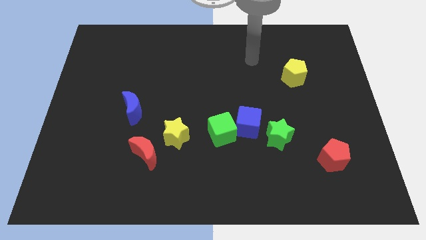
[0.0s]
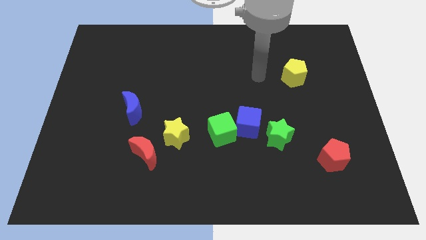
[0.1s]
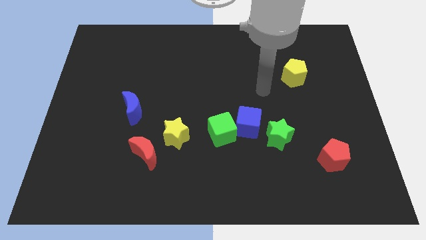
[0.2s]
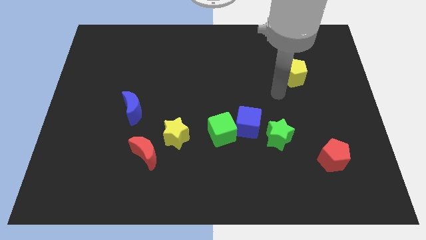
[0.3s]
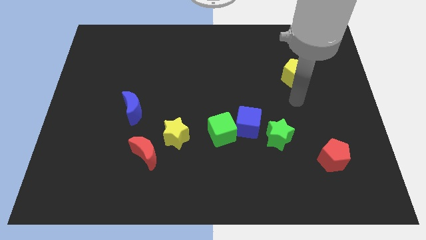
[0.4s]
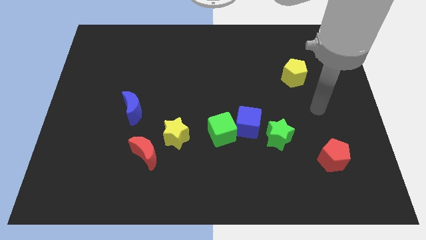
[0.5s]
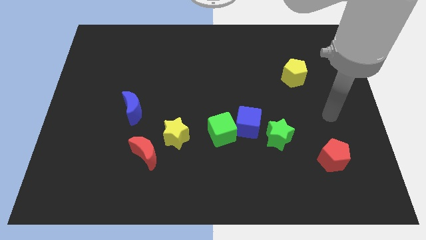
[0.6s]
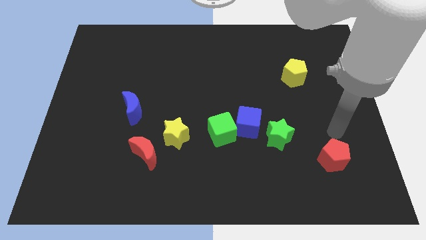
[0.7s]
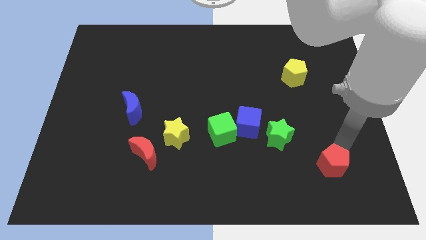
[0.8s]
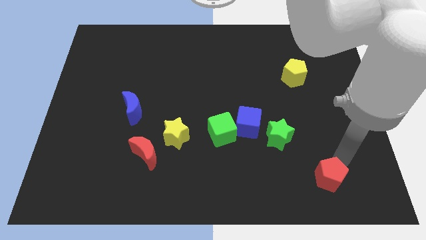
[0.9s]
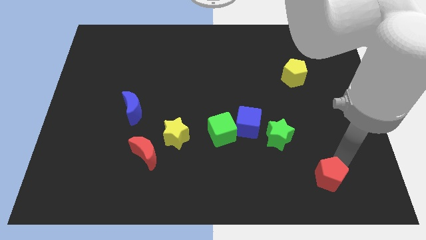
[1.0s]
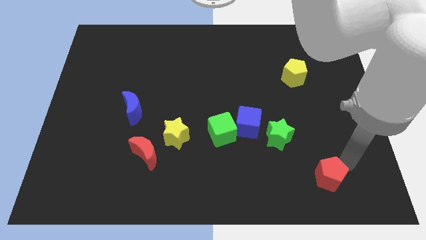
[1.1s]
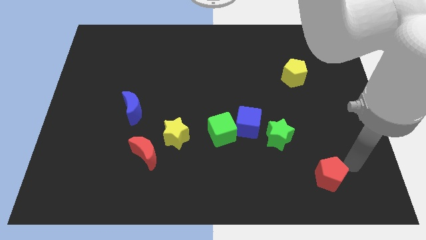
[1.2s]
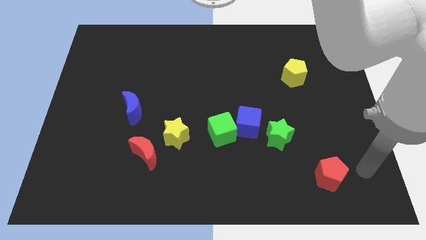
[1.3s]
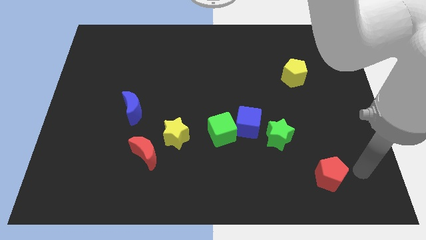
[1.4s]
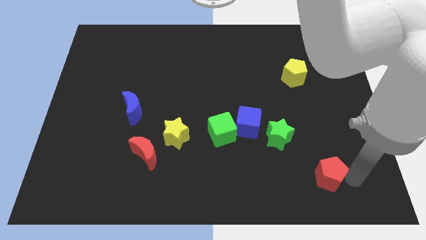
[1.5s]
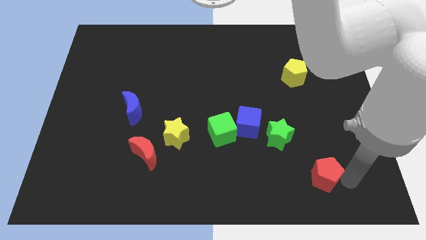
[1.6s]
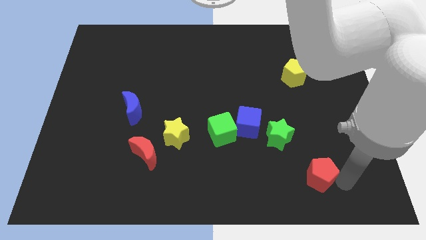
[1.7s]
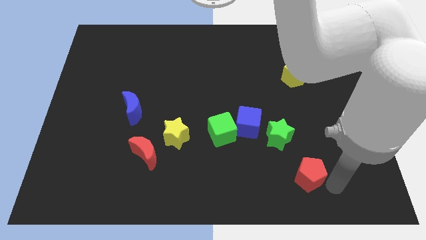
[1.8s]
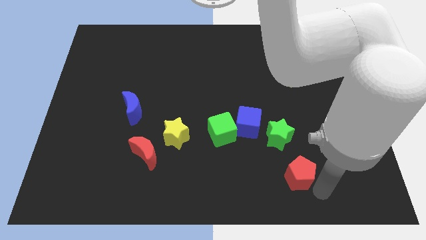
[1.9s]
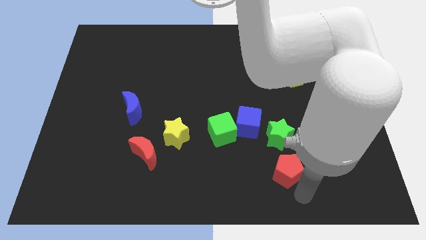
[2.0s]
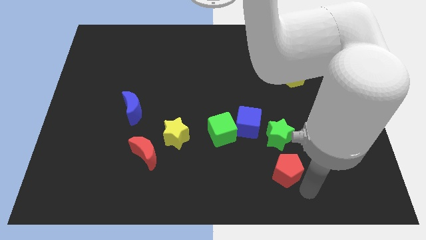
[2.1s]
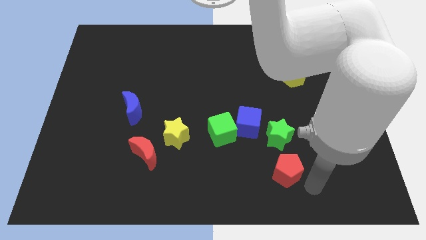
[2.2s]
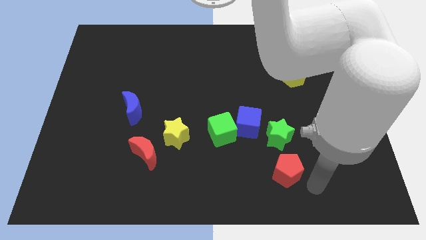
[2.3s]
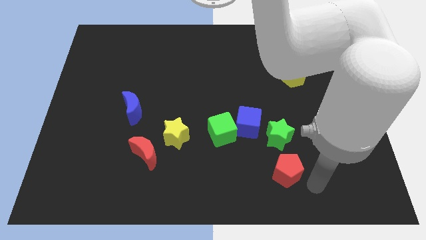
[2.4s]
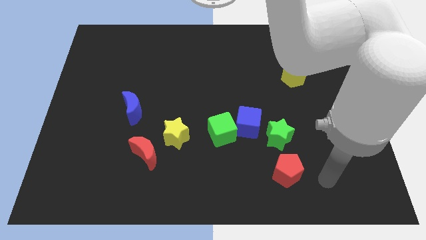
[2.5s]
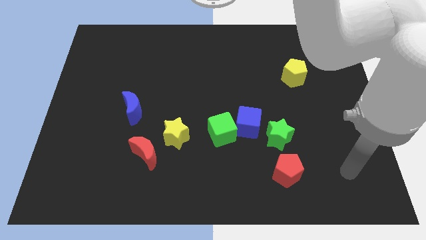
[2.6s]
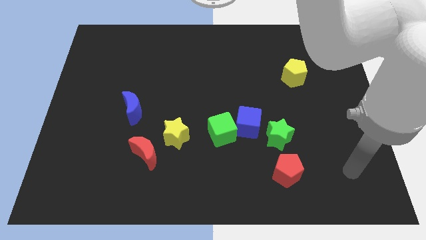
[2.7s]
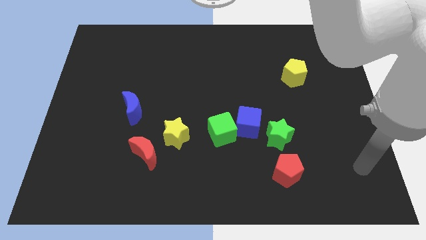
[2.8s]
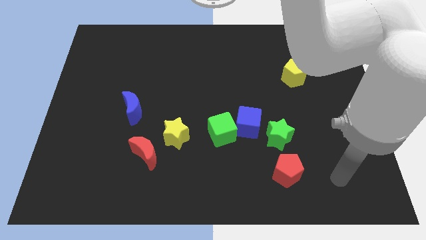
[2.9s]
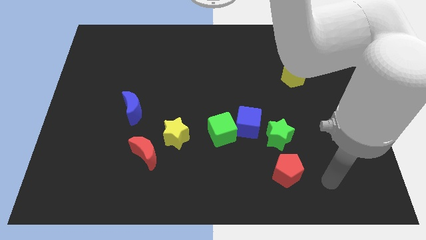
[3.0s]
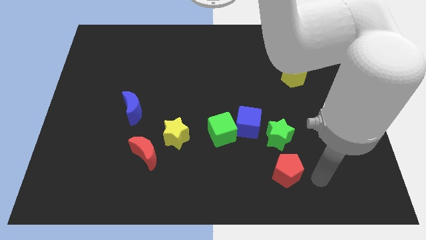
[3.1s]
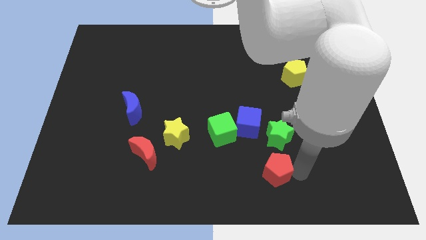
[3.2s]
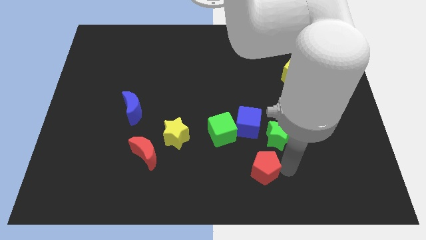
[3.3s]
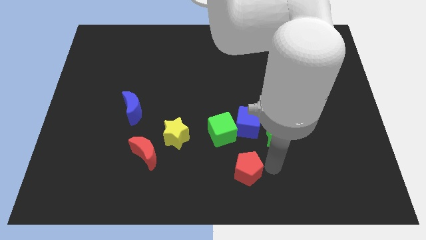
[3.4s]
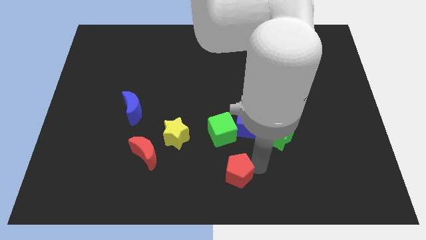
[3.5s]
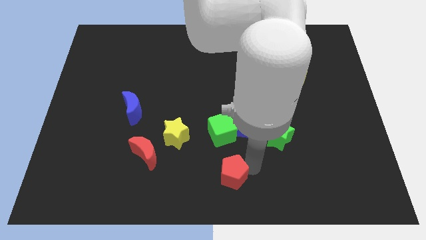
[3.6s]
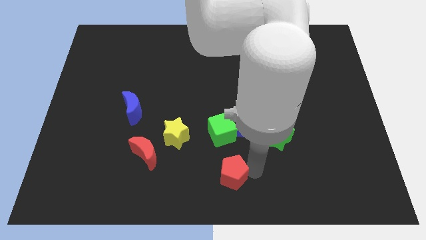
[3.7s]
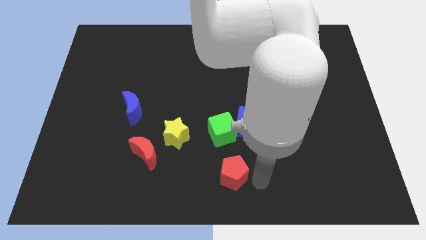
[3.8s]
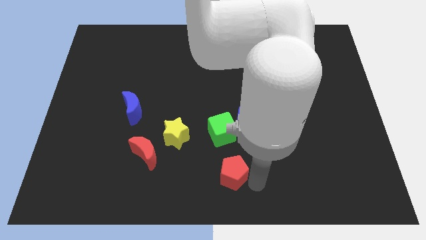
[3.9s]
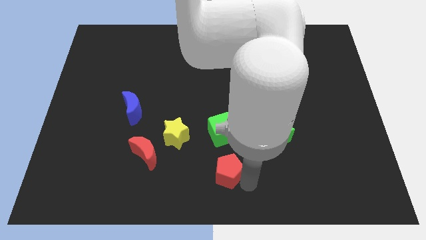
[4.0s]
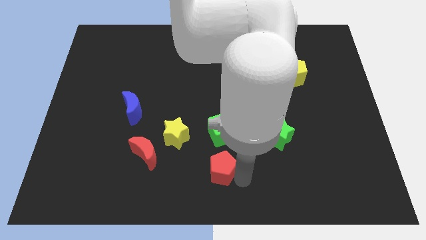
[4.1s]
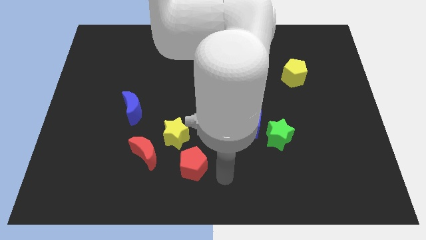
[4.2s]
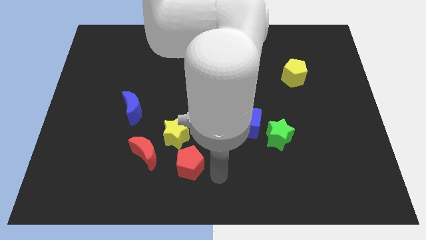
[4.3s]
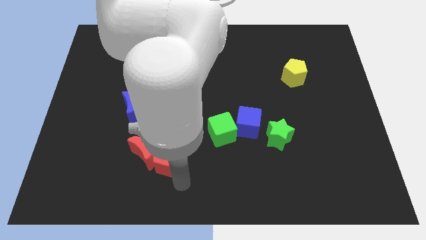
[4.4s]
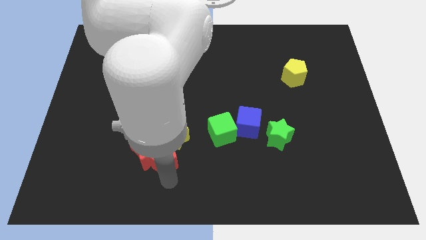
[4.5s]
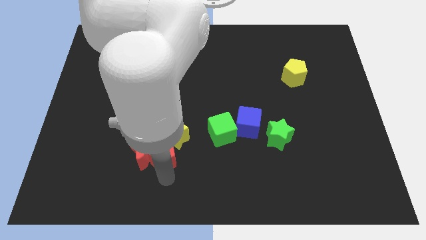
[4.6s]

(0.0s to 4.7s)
move the red pentagon next to the red moon

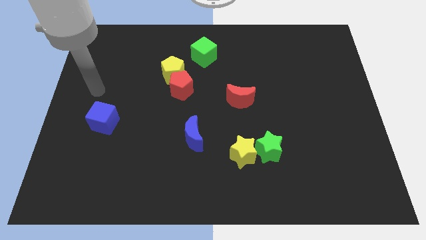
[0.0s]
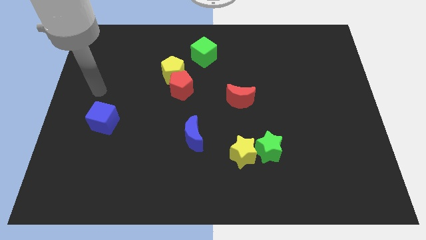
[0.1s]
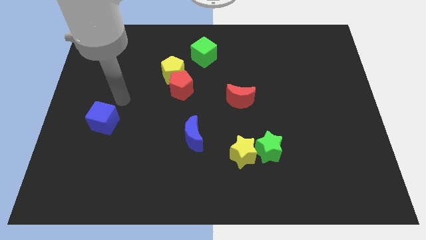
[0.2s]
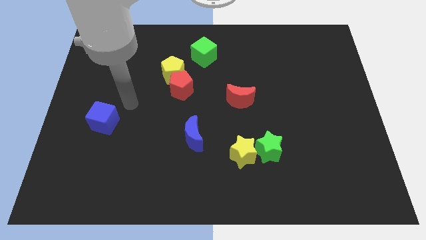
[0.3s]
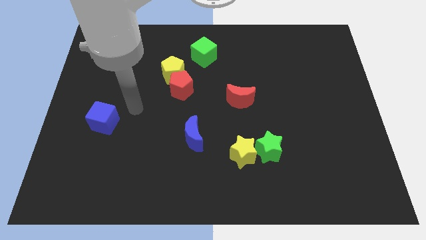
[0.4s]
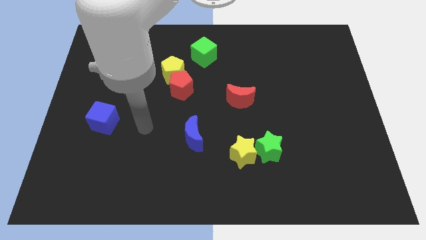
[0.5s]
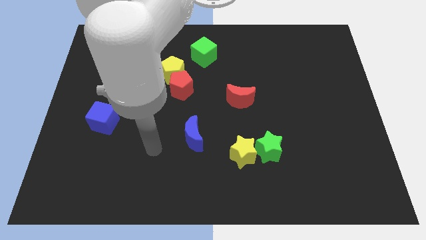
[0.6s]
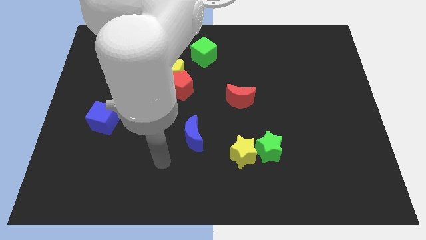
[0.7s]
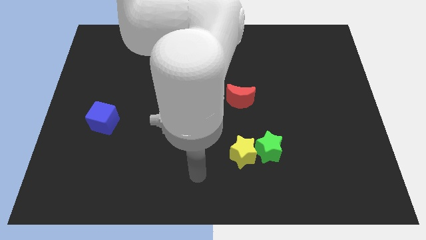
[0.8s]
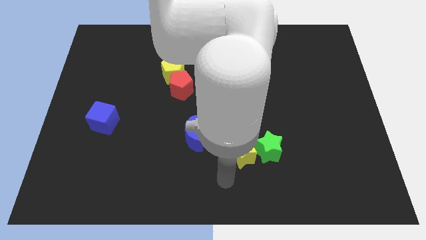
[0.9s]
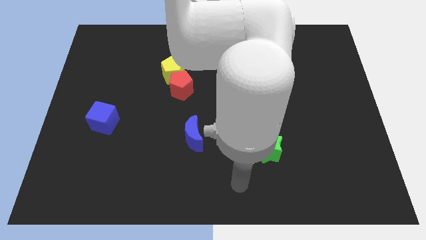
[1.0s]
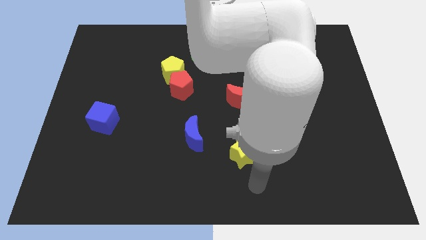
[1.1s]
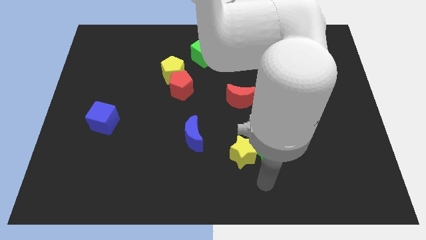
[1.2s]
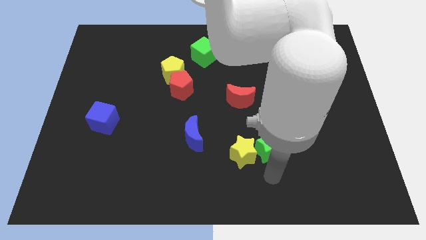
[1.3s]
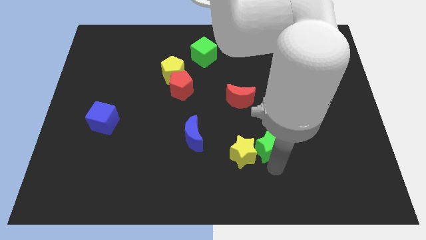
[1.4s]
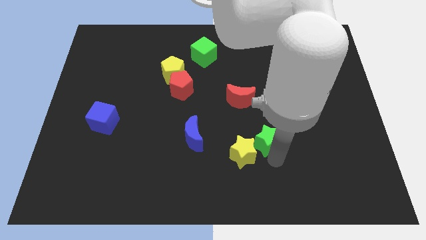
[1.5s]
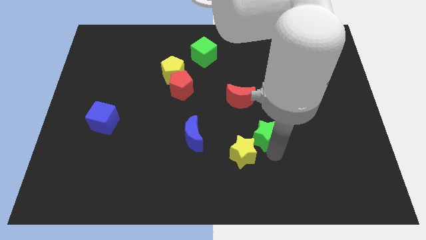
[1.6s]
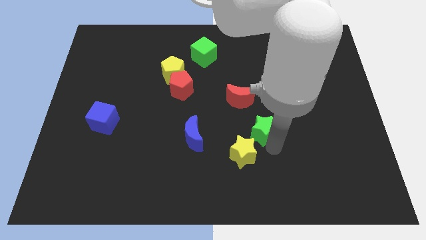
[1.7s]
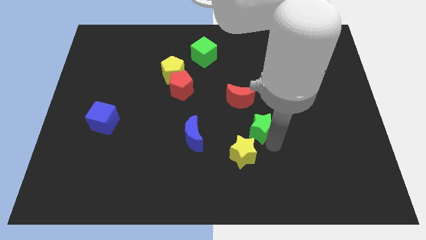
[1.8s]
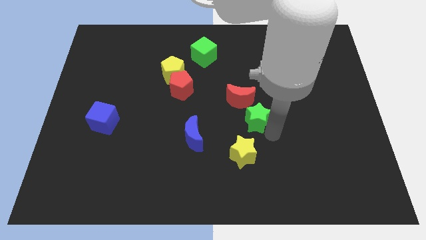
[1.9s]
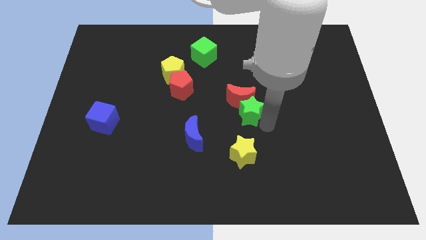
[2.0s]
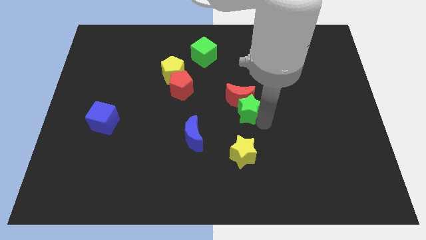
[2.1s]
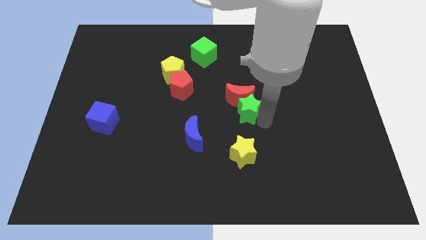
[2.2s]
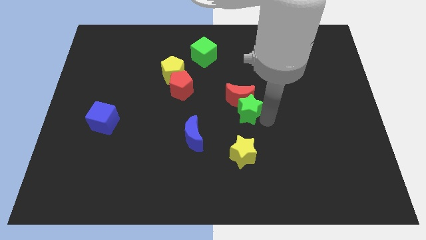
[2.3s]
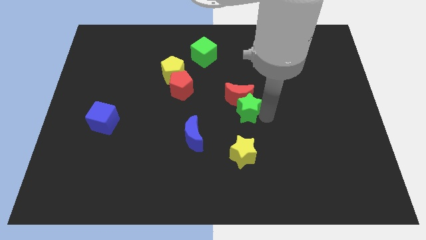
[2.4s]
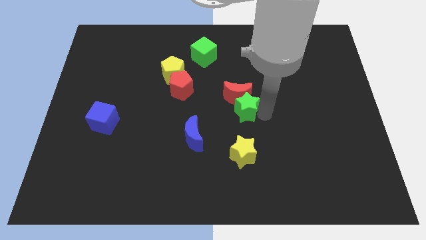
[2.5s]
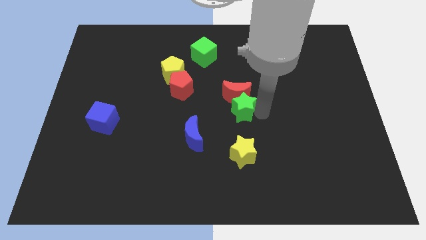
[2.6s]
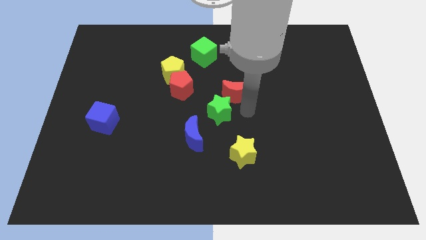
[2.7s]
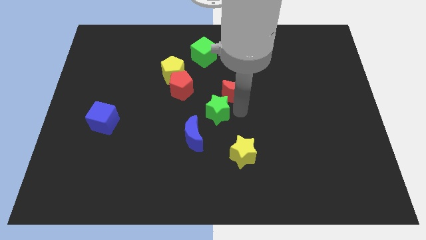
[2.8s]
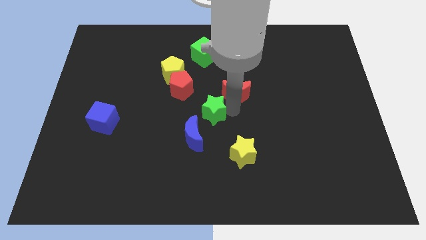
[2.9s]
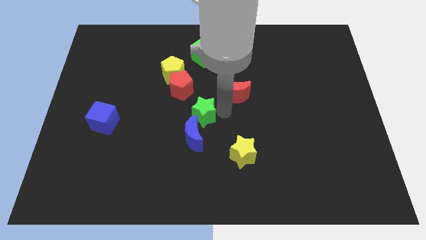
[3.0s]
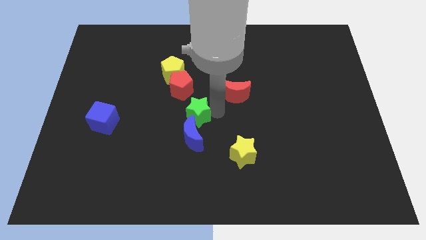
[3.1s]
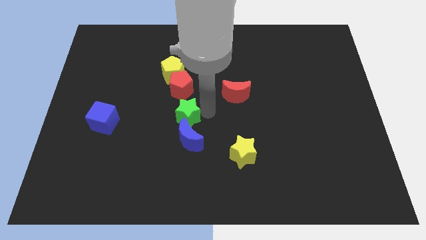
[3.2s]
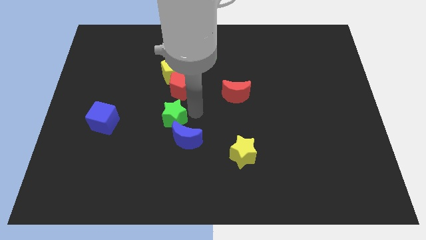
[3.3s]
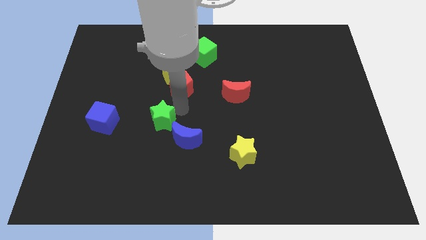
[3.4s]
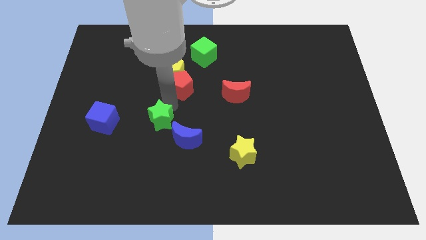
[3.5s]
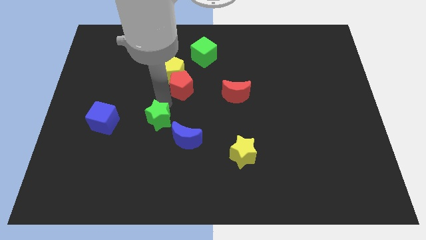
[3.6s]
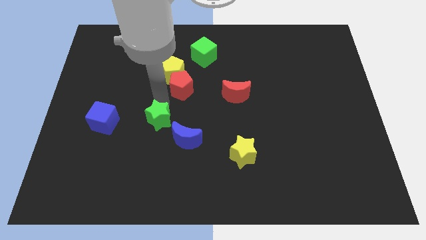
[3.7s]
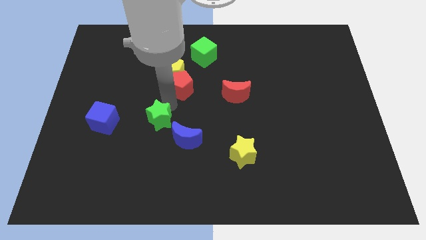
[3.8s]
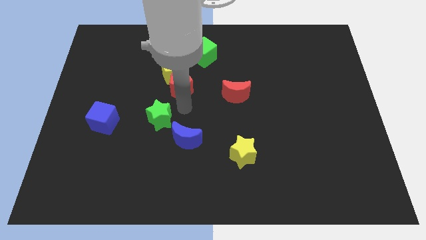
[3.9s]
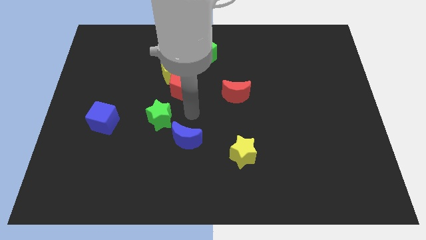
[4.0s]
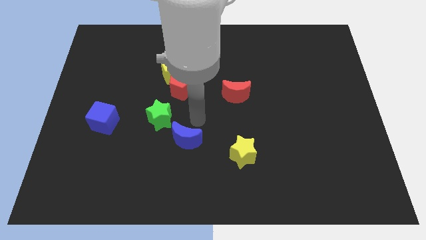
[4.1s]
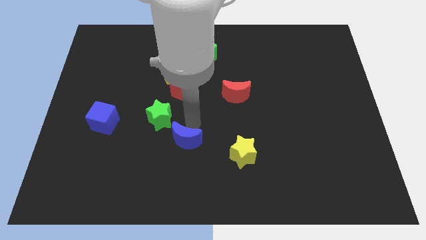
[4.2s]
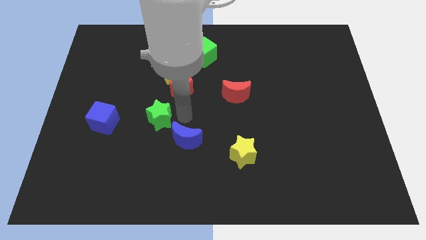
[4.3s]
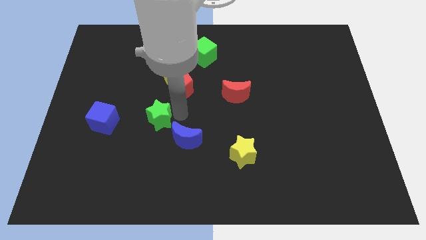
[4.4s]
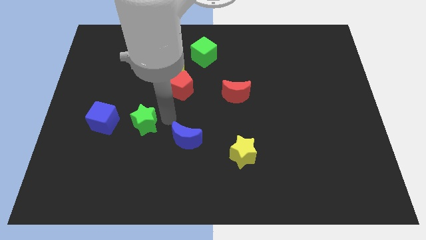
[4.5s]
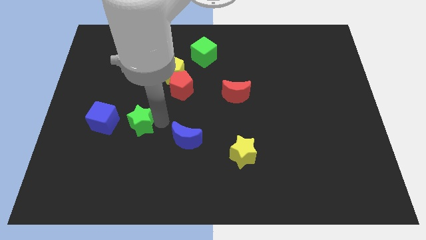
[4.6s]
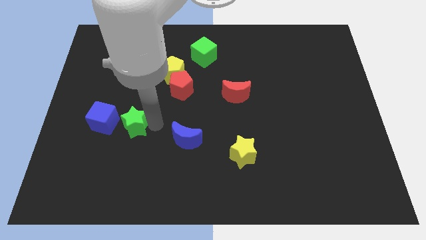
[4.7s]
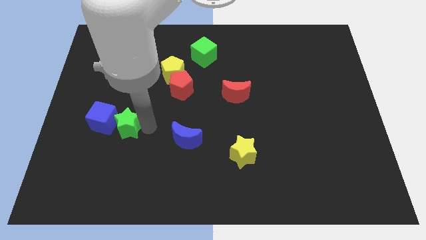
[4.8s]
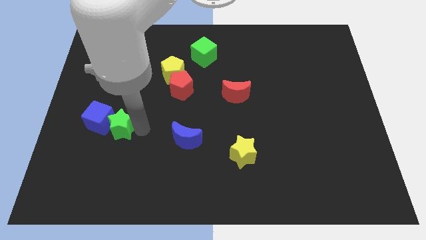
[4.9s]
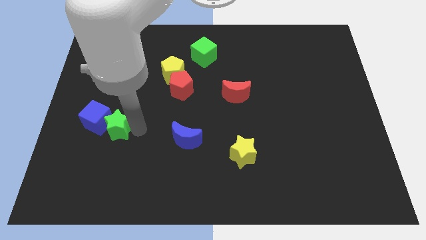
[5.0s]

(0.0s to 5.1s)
slide the green star to the blue cube
